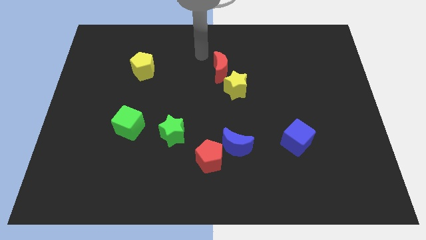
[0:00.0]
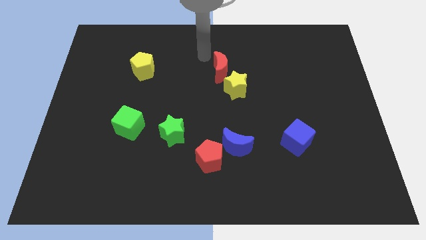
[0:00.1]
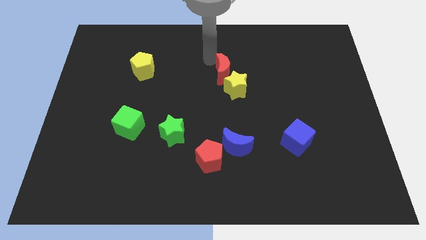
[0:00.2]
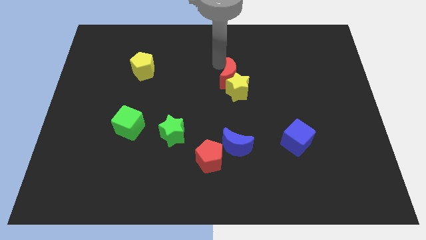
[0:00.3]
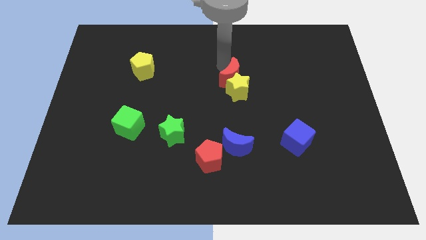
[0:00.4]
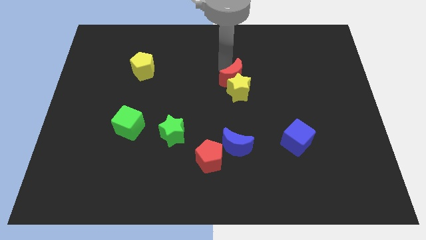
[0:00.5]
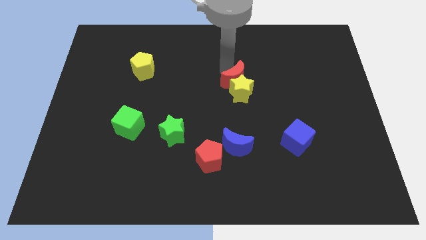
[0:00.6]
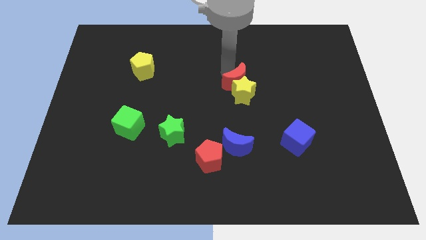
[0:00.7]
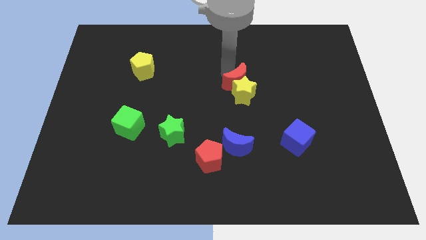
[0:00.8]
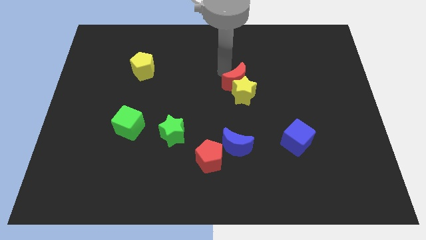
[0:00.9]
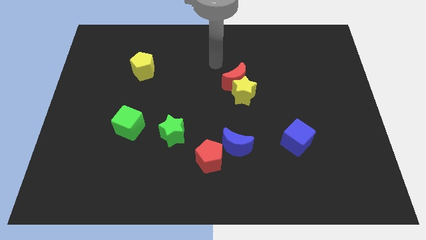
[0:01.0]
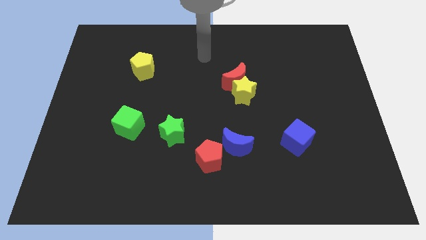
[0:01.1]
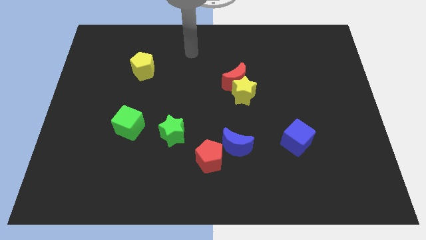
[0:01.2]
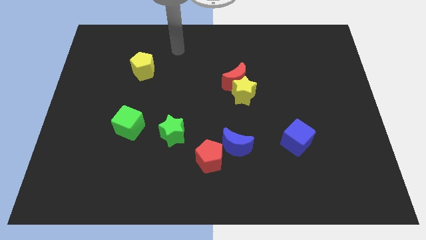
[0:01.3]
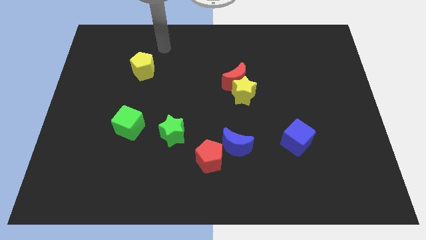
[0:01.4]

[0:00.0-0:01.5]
push the red crescent into the yellow star diagonally

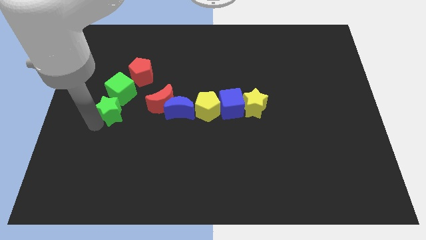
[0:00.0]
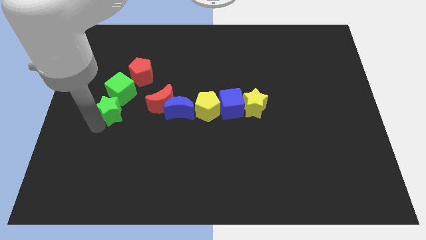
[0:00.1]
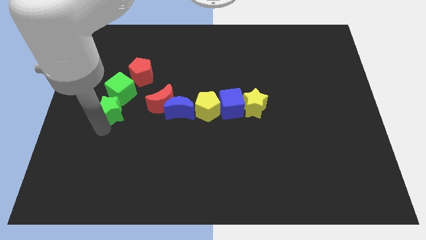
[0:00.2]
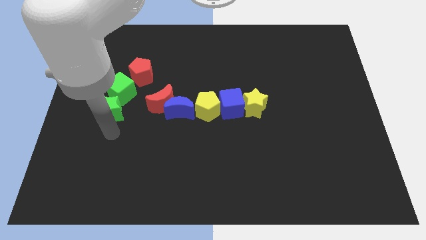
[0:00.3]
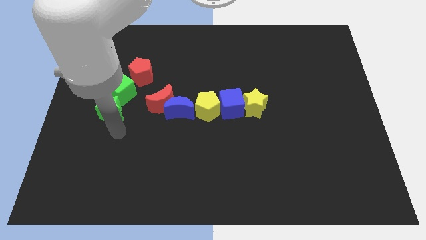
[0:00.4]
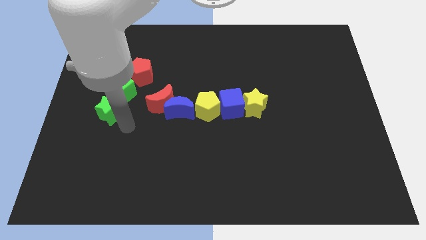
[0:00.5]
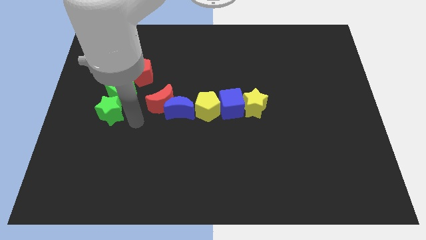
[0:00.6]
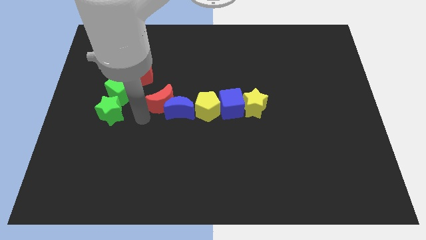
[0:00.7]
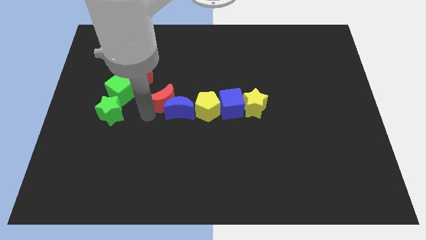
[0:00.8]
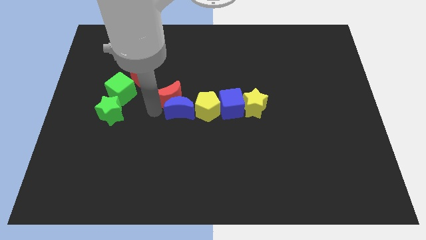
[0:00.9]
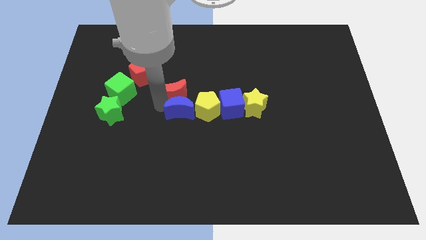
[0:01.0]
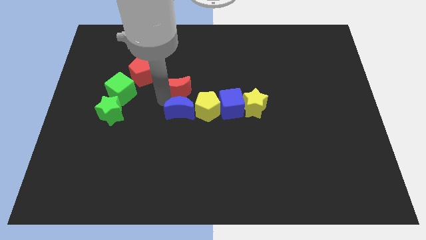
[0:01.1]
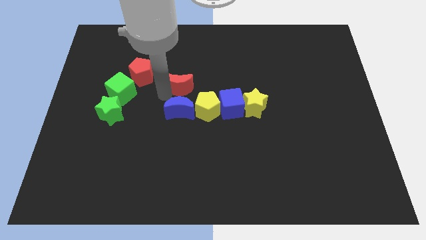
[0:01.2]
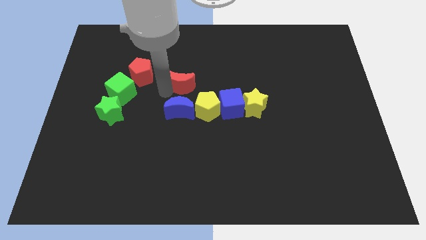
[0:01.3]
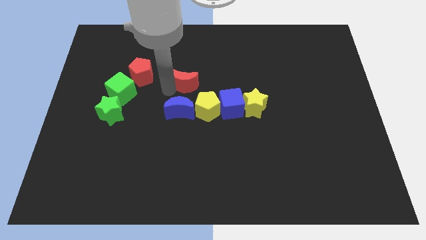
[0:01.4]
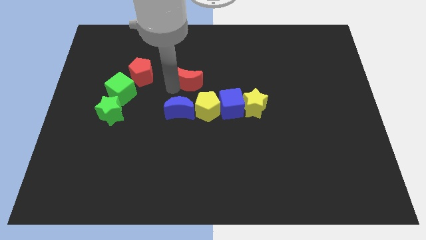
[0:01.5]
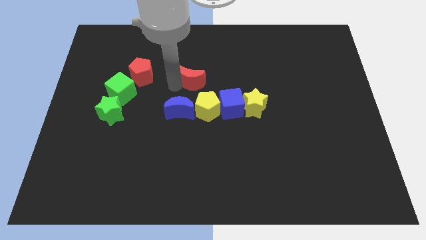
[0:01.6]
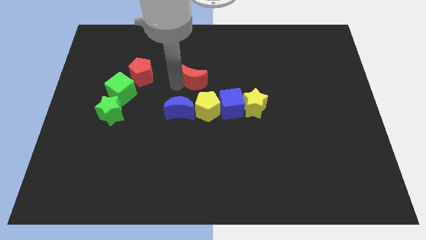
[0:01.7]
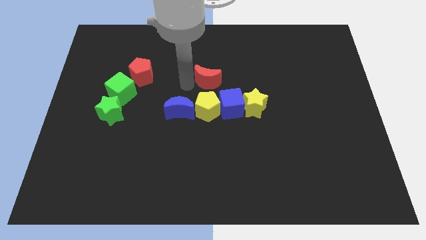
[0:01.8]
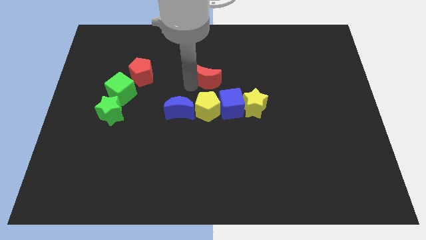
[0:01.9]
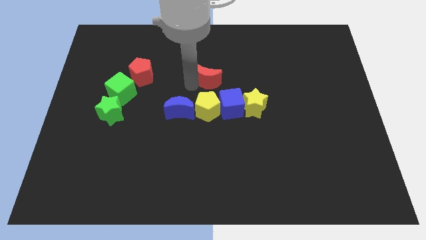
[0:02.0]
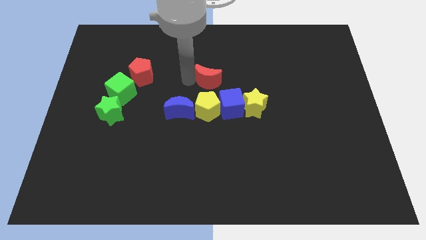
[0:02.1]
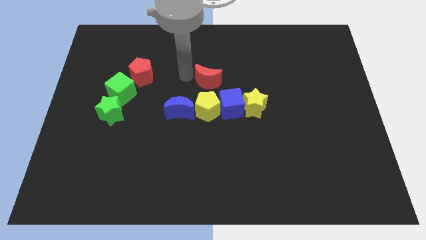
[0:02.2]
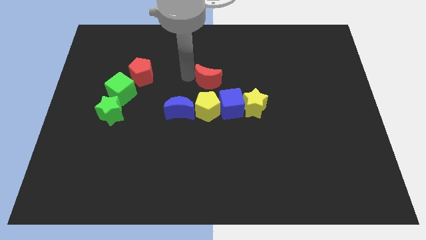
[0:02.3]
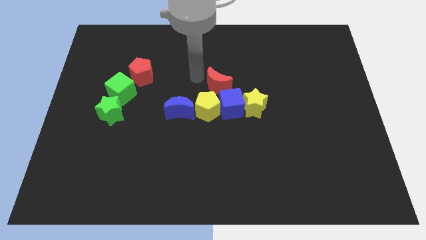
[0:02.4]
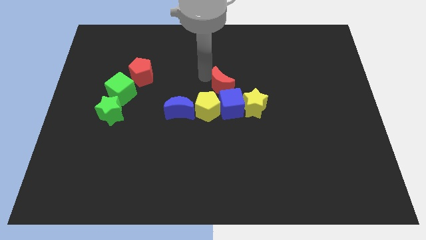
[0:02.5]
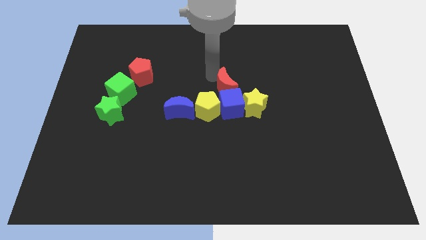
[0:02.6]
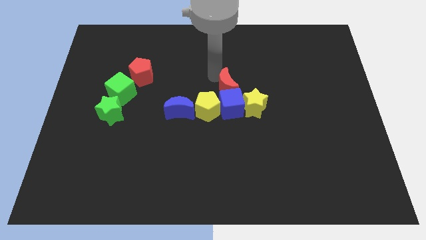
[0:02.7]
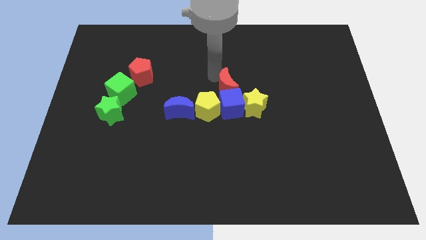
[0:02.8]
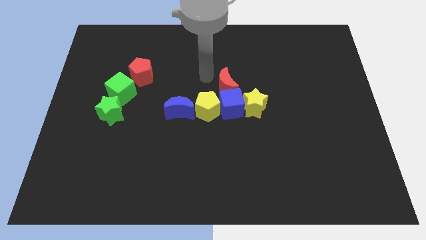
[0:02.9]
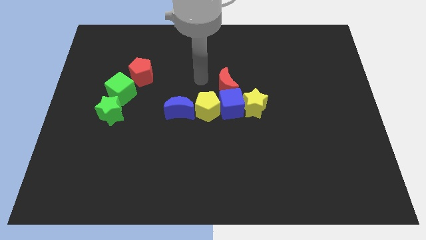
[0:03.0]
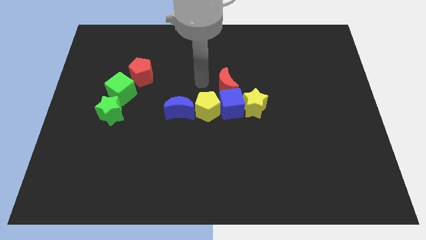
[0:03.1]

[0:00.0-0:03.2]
separate the red moon from the blue moon

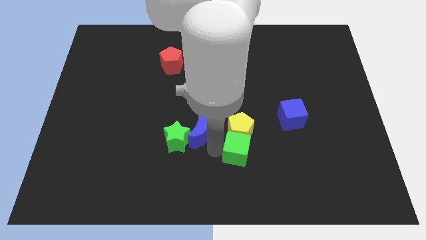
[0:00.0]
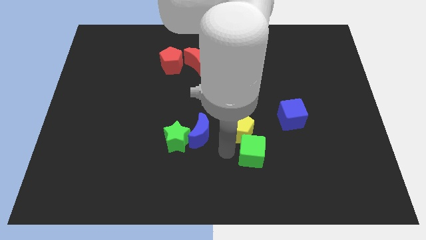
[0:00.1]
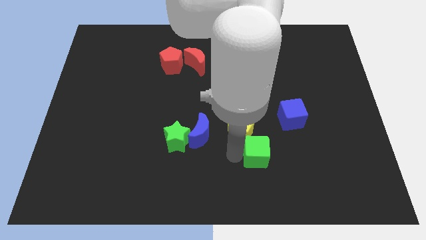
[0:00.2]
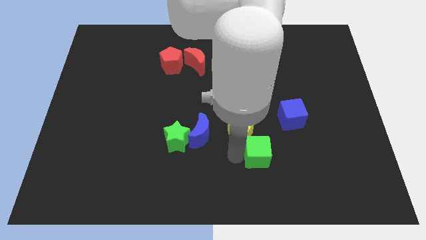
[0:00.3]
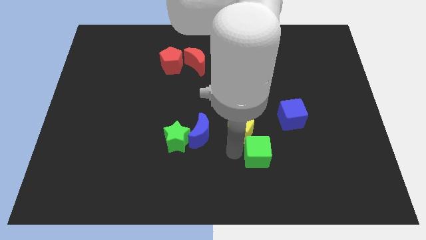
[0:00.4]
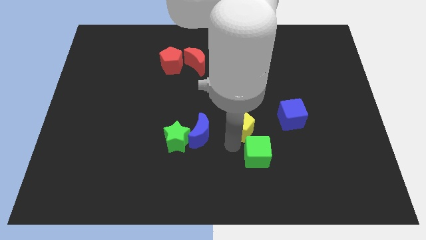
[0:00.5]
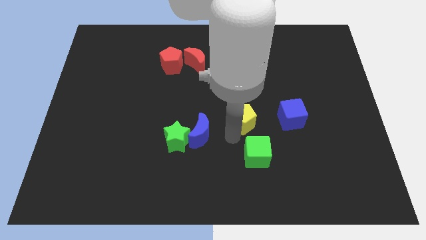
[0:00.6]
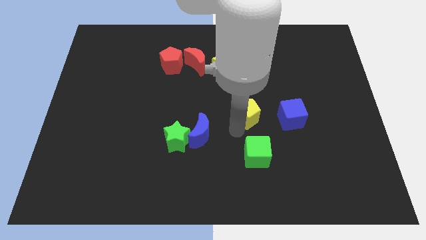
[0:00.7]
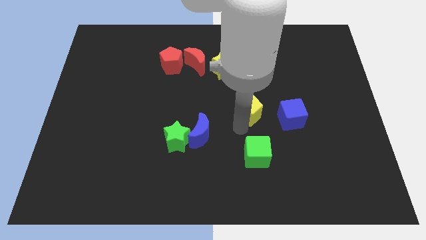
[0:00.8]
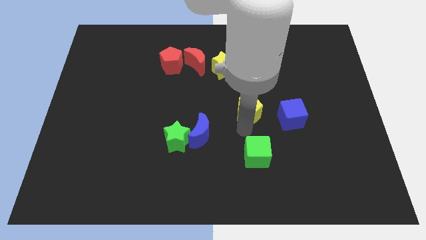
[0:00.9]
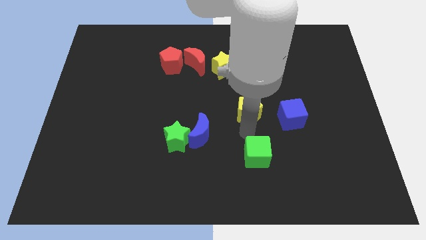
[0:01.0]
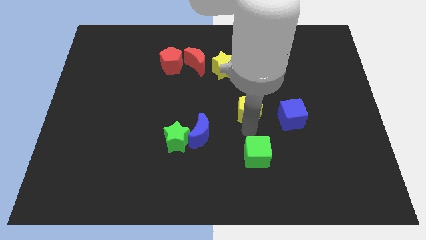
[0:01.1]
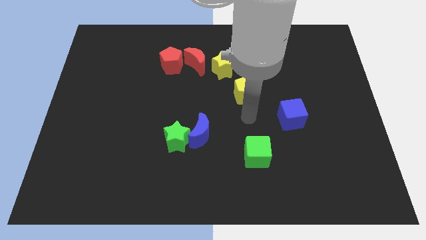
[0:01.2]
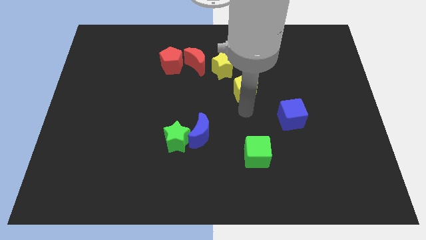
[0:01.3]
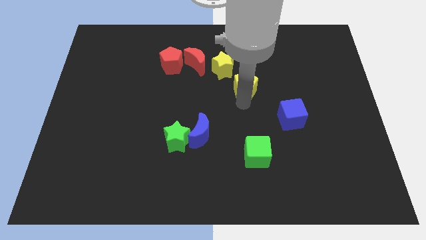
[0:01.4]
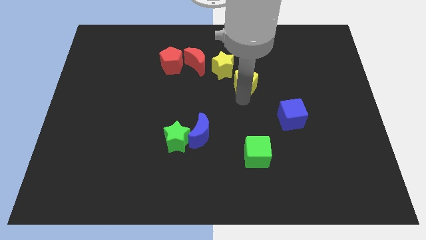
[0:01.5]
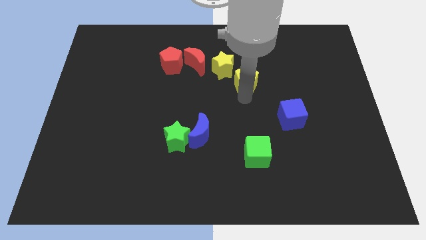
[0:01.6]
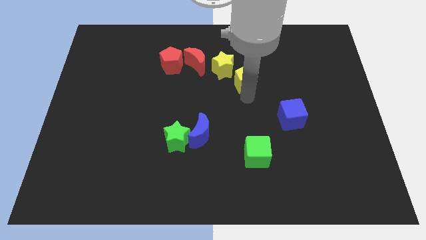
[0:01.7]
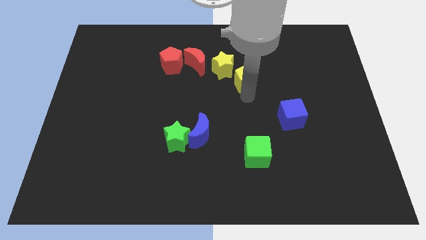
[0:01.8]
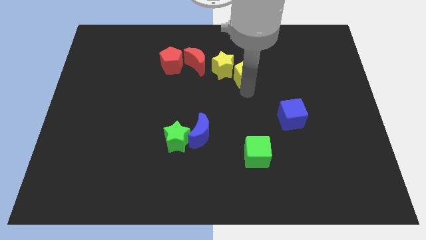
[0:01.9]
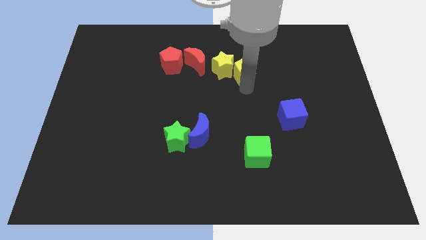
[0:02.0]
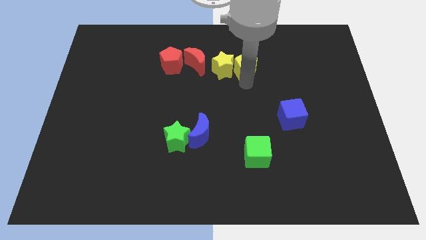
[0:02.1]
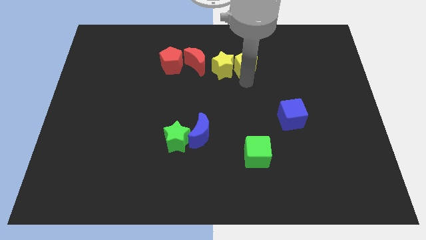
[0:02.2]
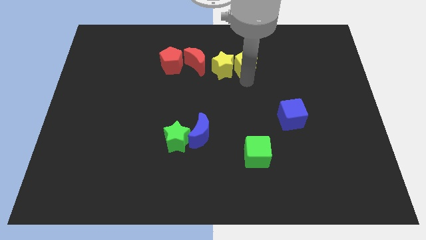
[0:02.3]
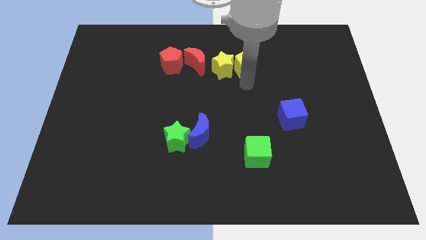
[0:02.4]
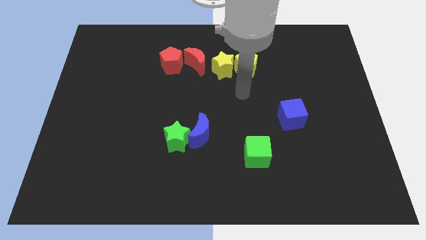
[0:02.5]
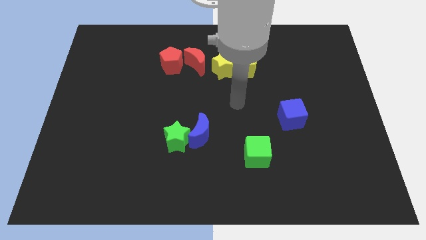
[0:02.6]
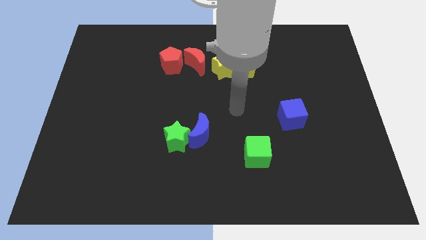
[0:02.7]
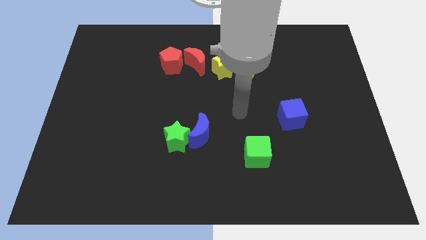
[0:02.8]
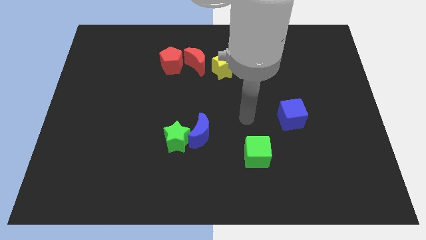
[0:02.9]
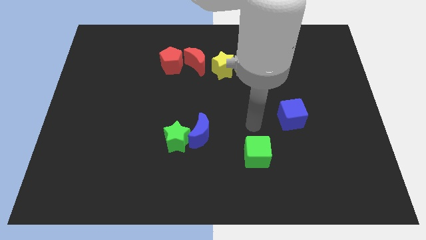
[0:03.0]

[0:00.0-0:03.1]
place yellow pentagon to the right of yellow star

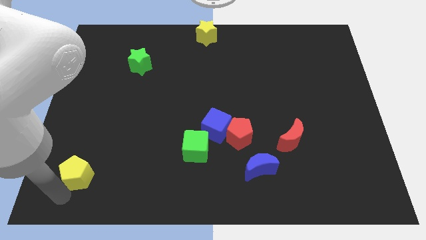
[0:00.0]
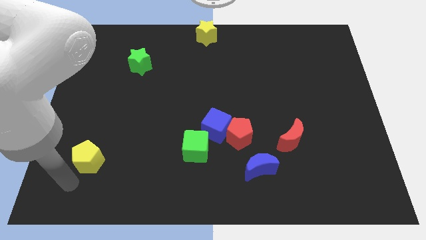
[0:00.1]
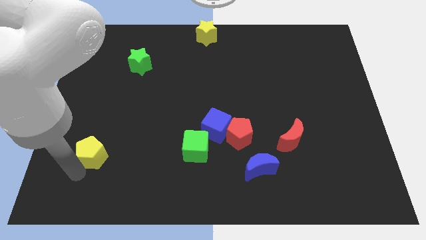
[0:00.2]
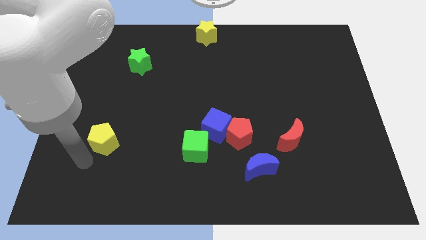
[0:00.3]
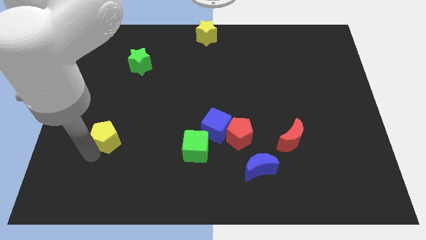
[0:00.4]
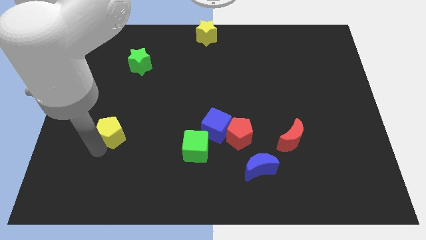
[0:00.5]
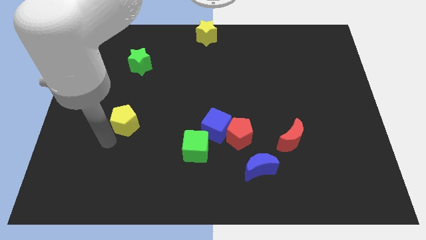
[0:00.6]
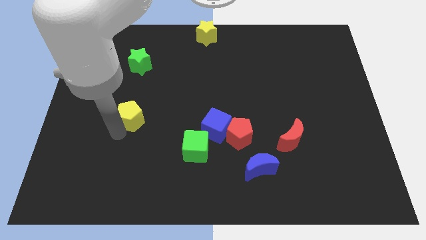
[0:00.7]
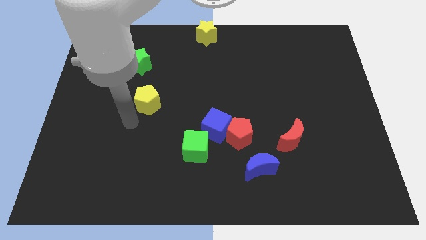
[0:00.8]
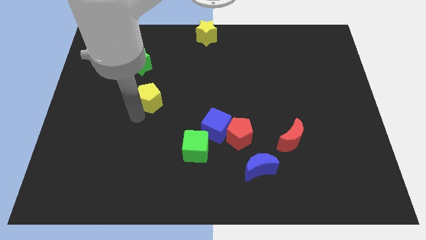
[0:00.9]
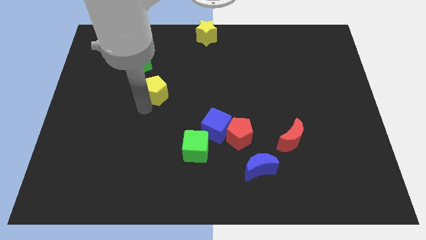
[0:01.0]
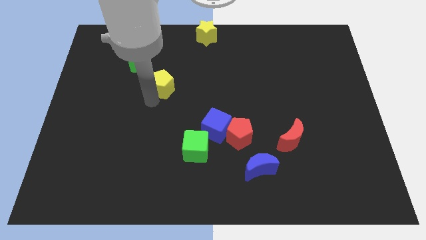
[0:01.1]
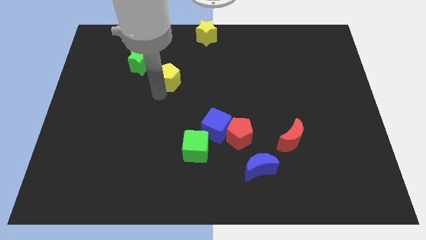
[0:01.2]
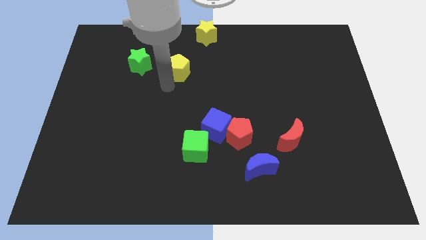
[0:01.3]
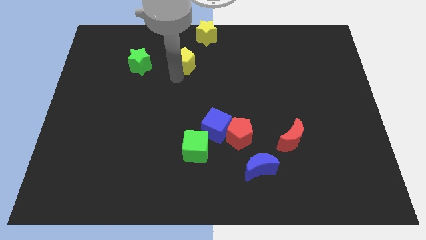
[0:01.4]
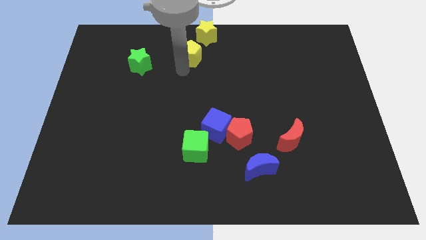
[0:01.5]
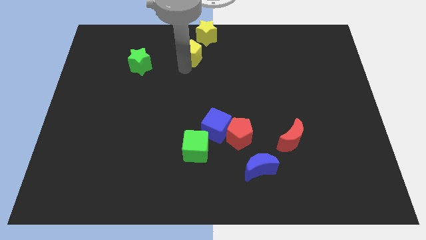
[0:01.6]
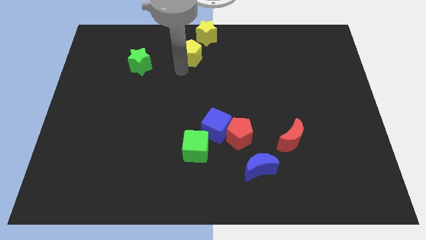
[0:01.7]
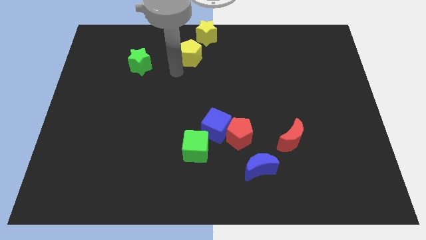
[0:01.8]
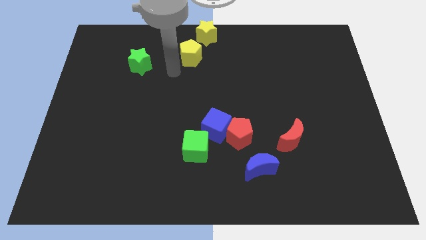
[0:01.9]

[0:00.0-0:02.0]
slide the yellow pentagon towards the yellow star
